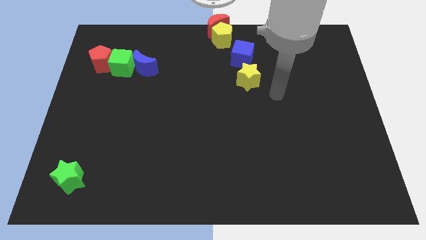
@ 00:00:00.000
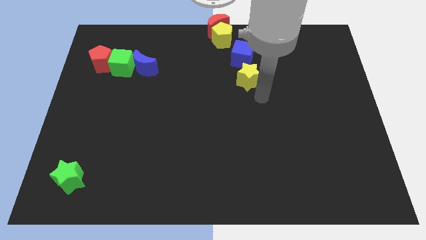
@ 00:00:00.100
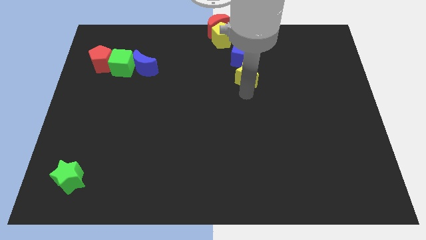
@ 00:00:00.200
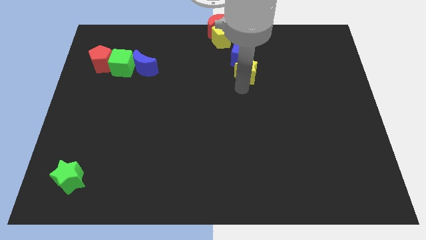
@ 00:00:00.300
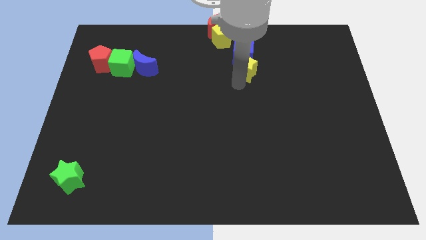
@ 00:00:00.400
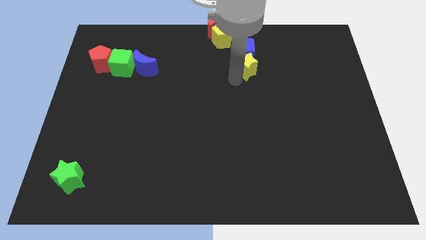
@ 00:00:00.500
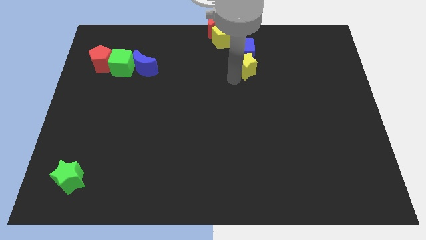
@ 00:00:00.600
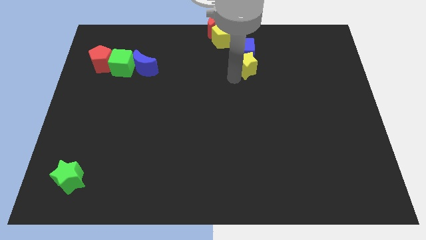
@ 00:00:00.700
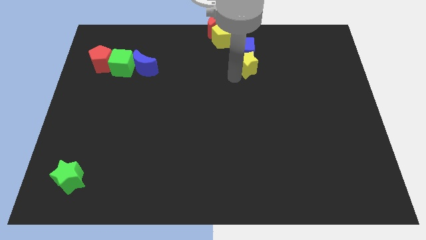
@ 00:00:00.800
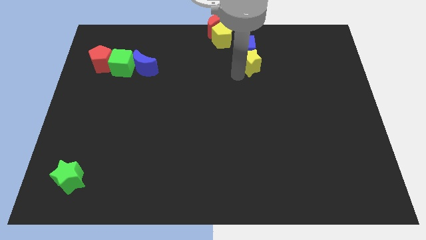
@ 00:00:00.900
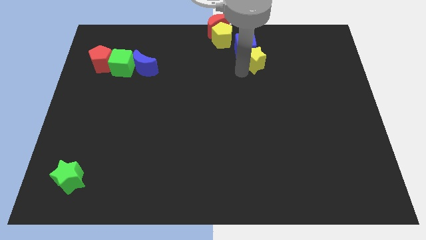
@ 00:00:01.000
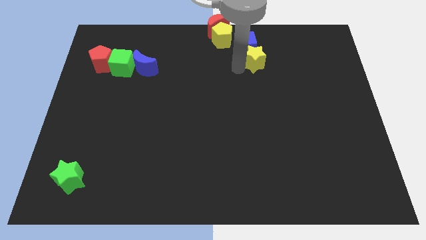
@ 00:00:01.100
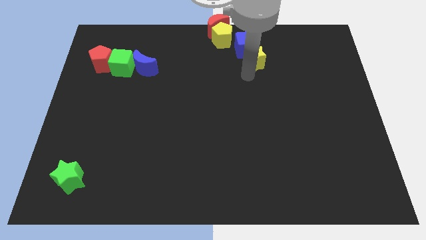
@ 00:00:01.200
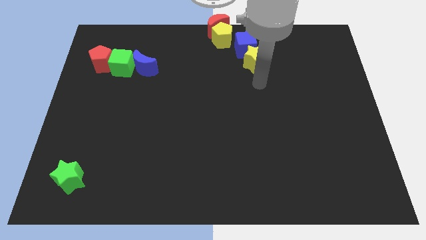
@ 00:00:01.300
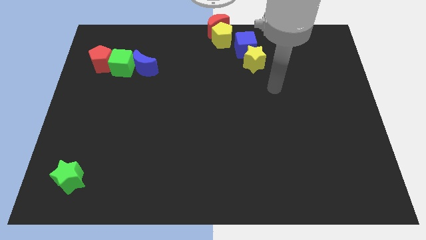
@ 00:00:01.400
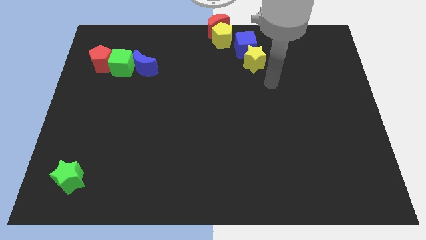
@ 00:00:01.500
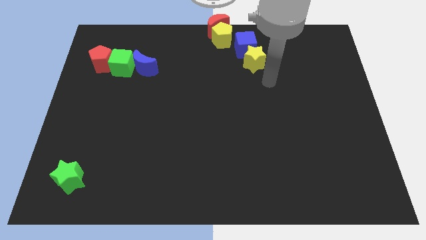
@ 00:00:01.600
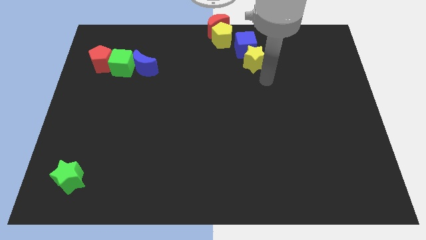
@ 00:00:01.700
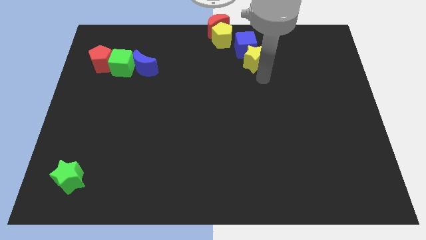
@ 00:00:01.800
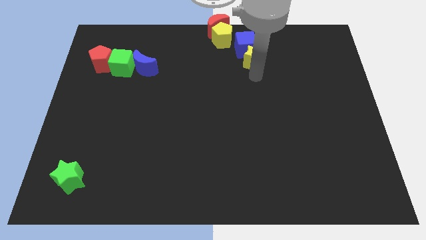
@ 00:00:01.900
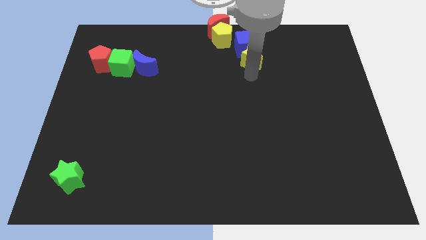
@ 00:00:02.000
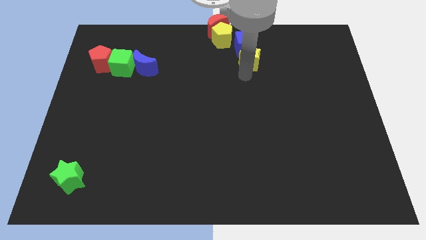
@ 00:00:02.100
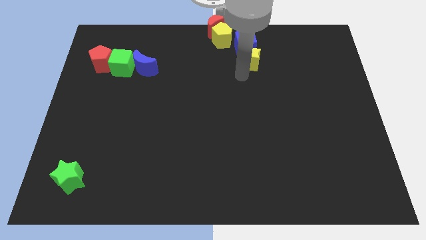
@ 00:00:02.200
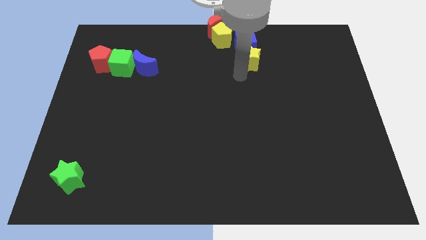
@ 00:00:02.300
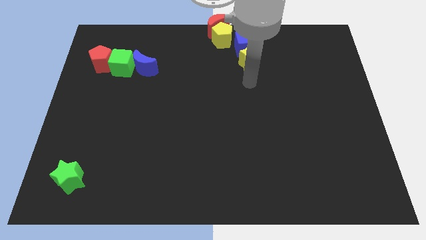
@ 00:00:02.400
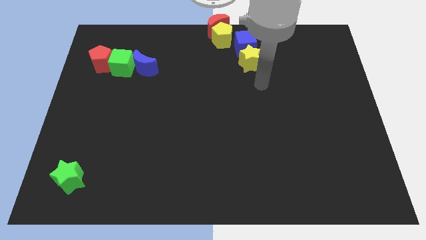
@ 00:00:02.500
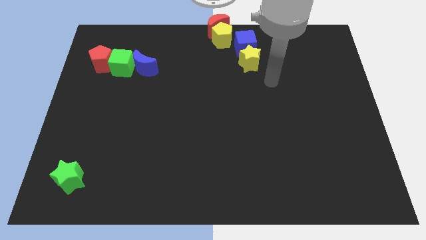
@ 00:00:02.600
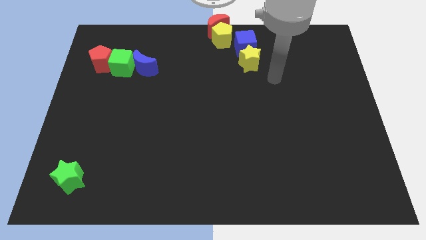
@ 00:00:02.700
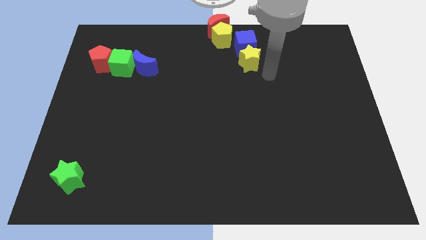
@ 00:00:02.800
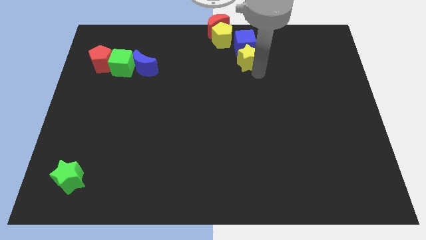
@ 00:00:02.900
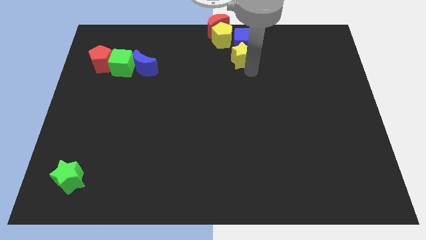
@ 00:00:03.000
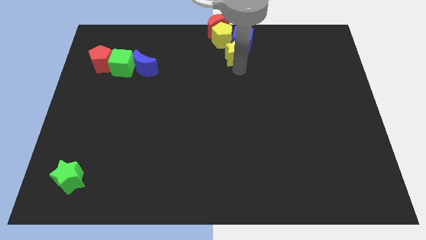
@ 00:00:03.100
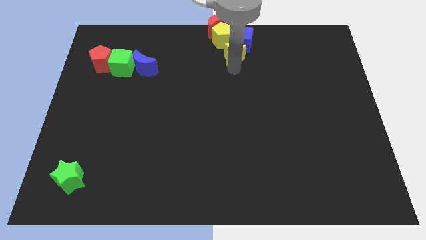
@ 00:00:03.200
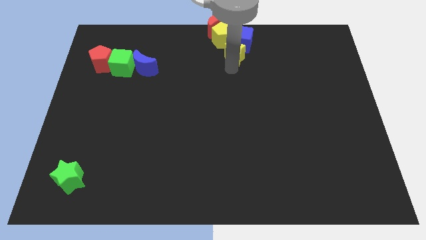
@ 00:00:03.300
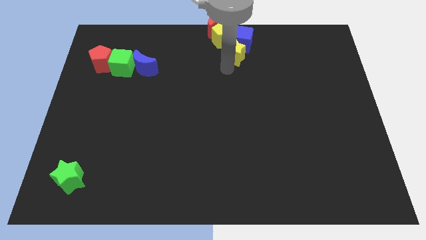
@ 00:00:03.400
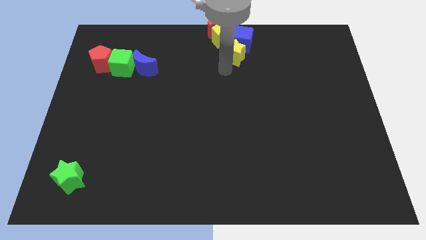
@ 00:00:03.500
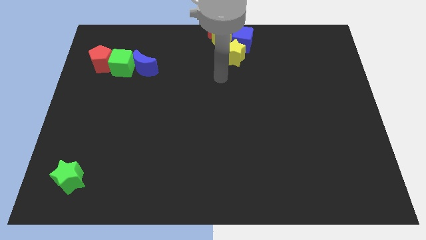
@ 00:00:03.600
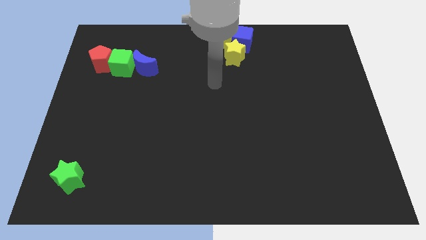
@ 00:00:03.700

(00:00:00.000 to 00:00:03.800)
push the blue cube with the yellow star to the top middle

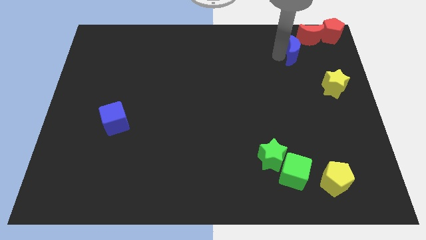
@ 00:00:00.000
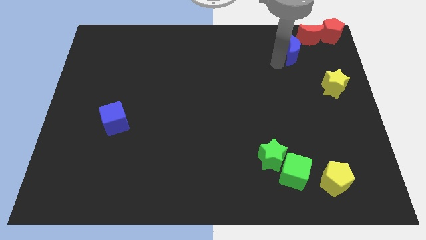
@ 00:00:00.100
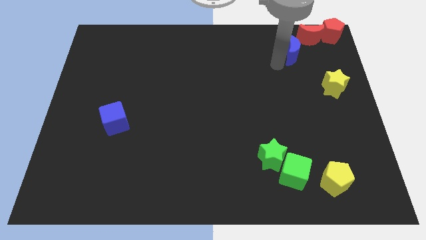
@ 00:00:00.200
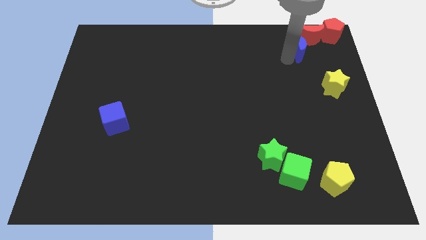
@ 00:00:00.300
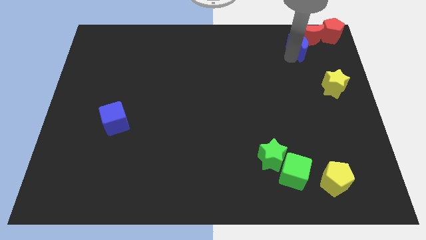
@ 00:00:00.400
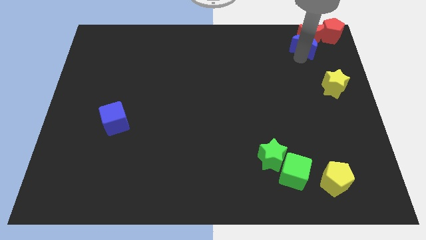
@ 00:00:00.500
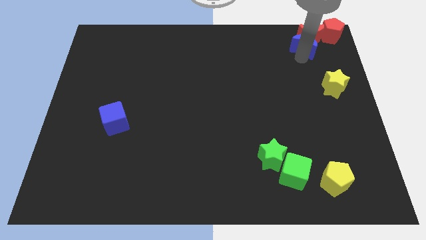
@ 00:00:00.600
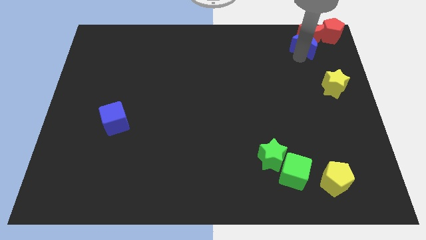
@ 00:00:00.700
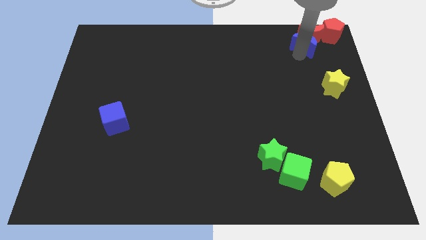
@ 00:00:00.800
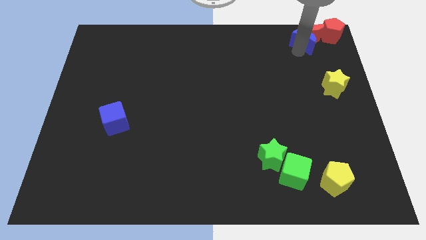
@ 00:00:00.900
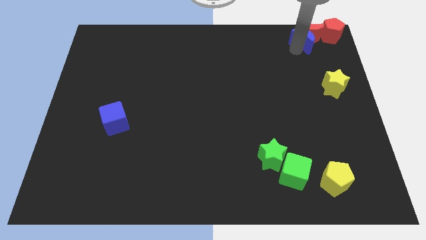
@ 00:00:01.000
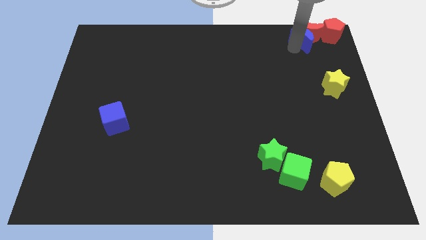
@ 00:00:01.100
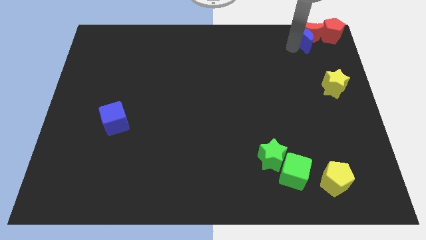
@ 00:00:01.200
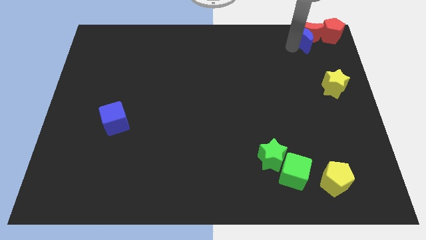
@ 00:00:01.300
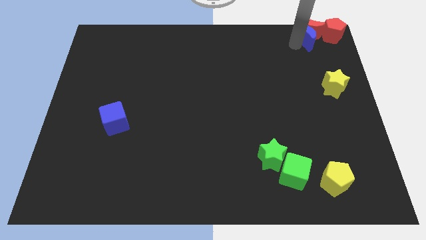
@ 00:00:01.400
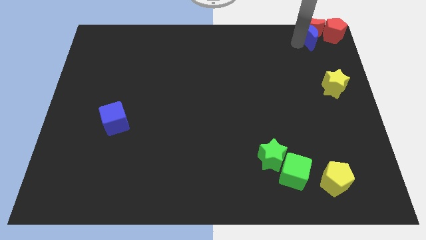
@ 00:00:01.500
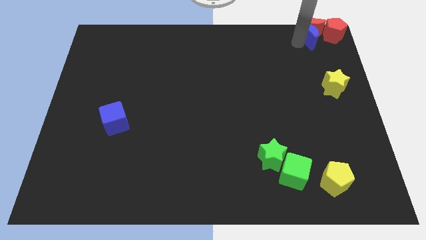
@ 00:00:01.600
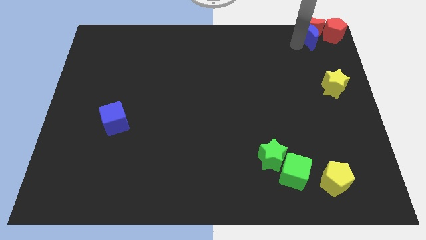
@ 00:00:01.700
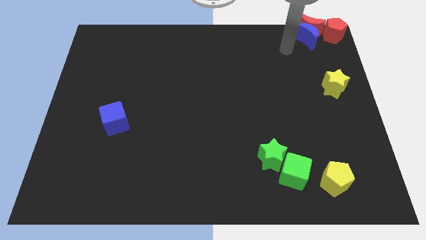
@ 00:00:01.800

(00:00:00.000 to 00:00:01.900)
push blue moon into the red moon

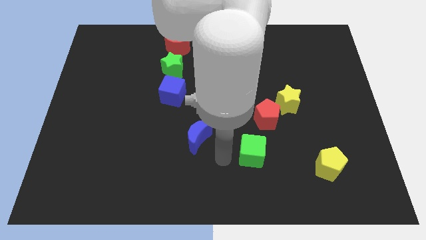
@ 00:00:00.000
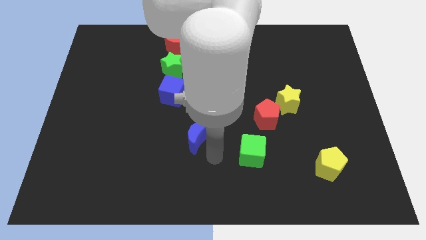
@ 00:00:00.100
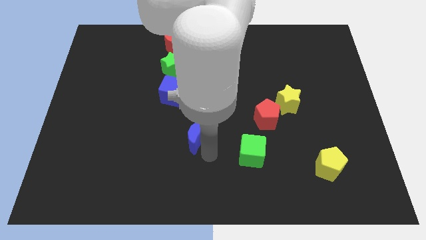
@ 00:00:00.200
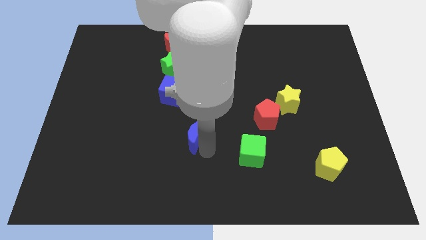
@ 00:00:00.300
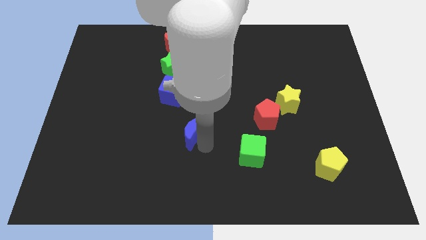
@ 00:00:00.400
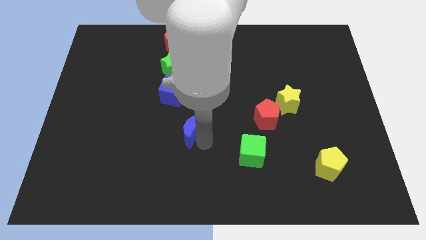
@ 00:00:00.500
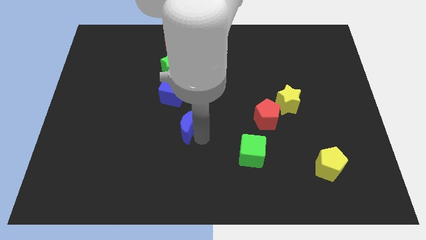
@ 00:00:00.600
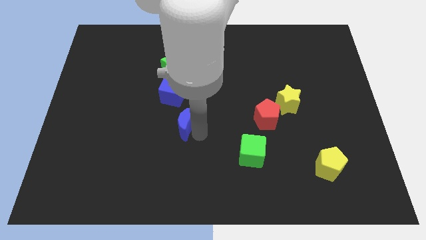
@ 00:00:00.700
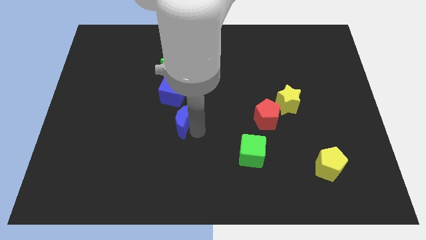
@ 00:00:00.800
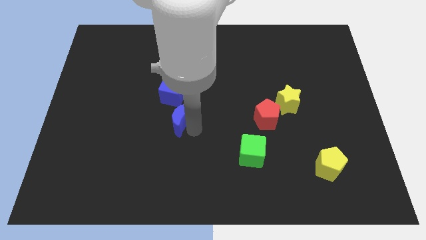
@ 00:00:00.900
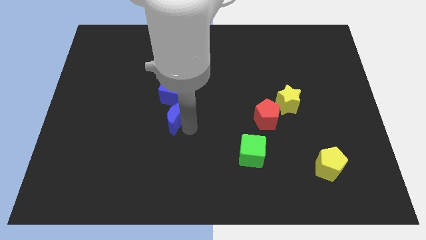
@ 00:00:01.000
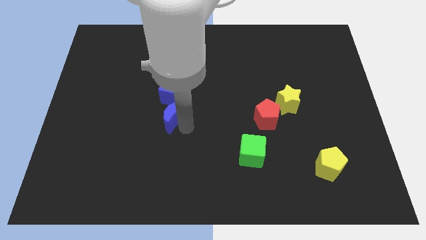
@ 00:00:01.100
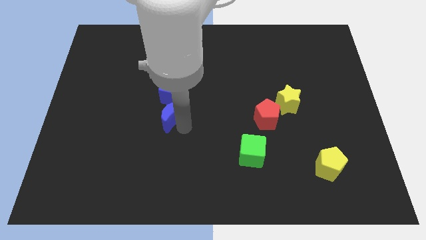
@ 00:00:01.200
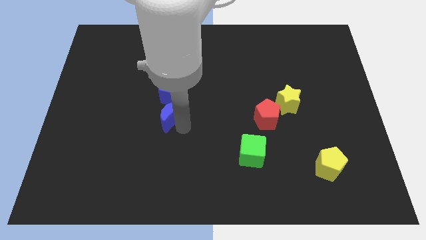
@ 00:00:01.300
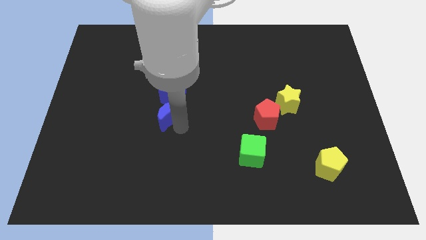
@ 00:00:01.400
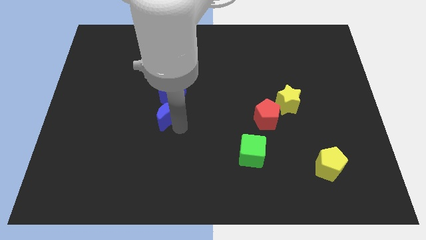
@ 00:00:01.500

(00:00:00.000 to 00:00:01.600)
place the blue moon below blue cube

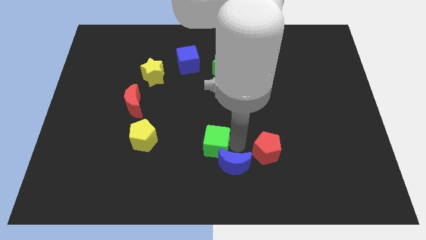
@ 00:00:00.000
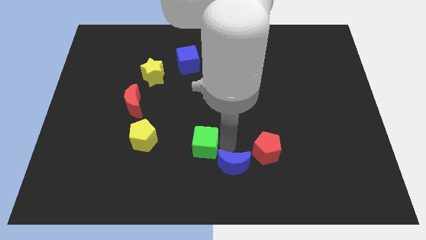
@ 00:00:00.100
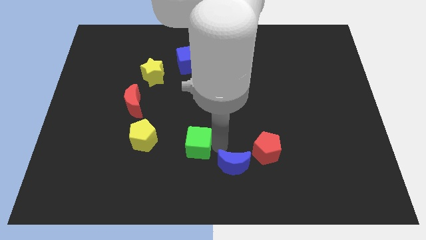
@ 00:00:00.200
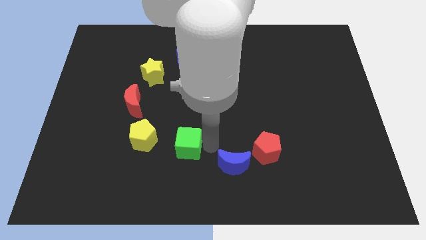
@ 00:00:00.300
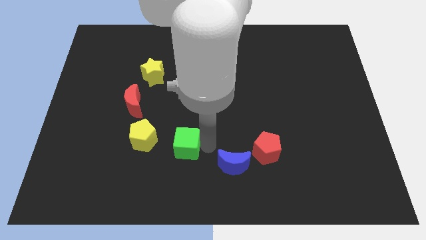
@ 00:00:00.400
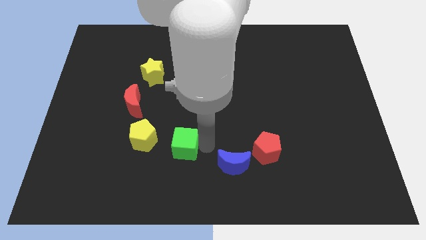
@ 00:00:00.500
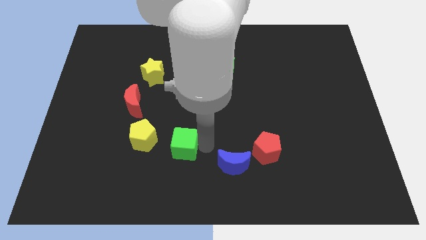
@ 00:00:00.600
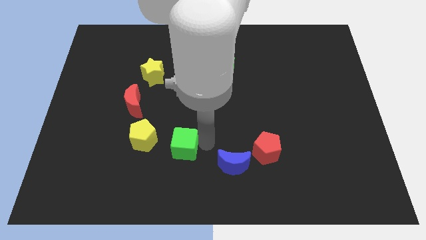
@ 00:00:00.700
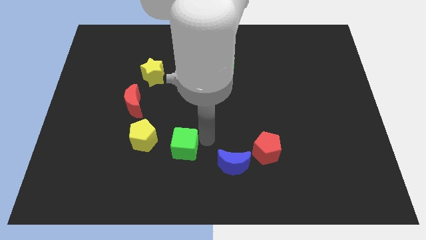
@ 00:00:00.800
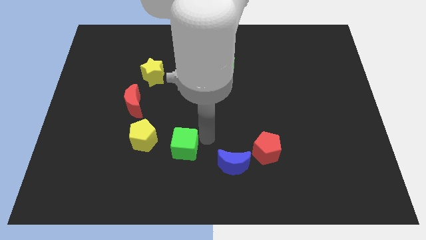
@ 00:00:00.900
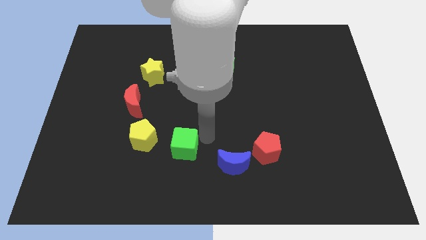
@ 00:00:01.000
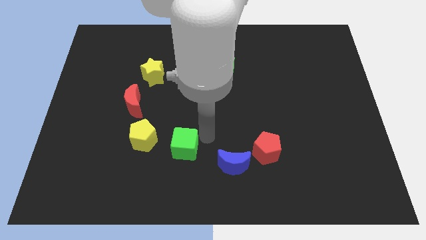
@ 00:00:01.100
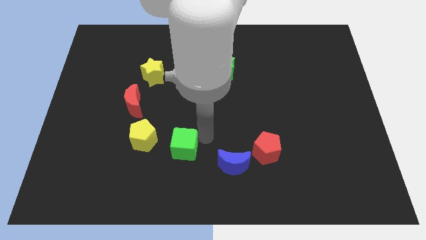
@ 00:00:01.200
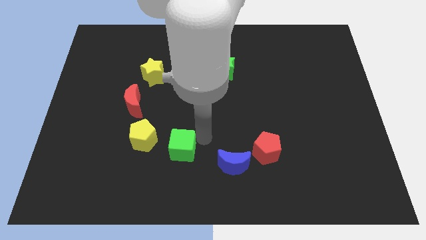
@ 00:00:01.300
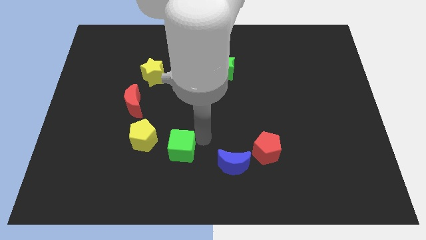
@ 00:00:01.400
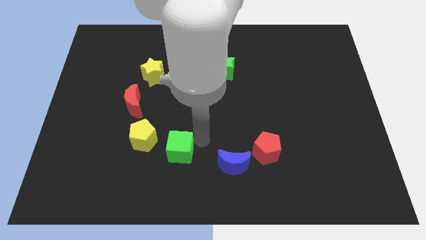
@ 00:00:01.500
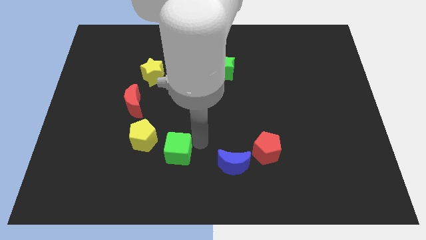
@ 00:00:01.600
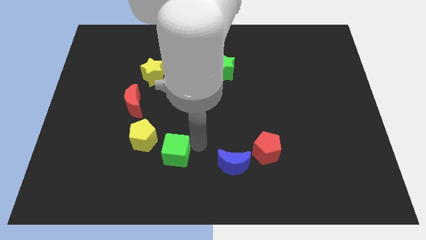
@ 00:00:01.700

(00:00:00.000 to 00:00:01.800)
place the green cube right to the yellow pentagon
